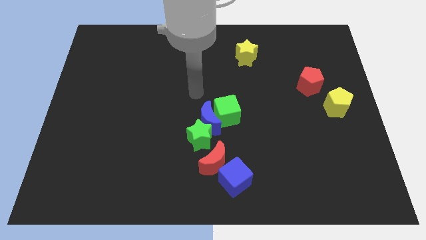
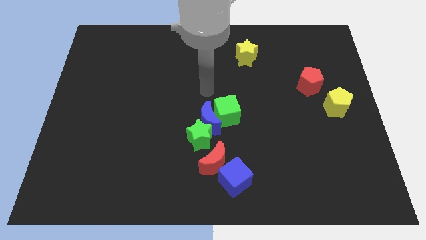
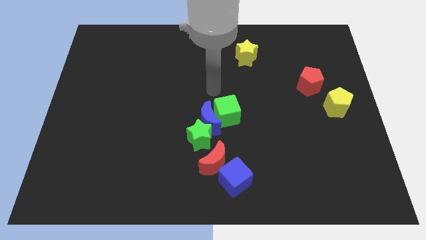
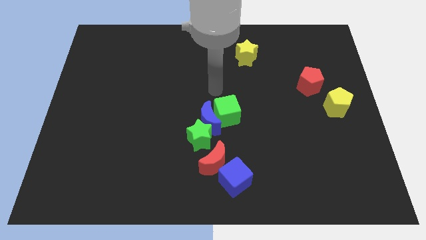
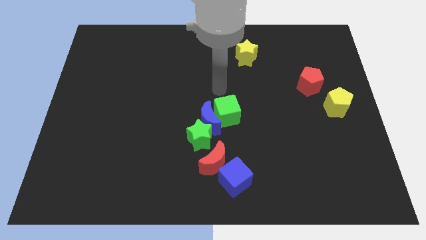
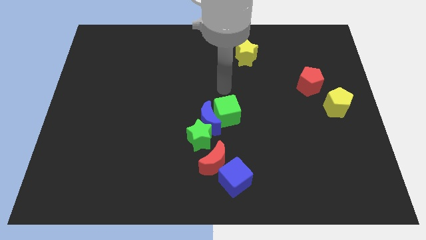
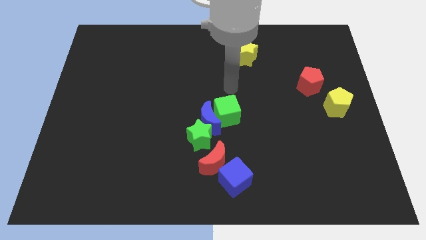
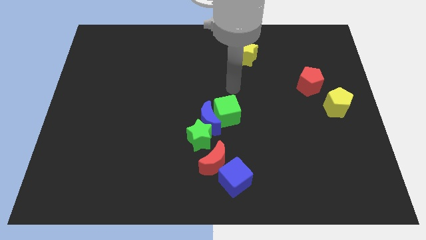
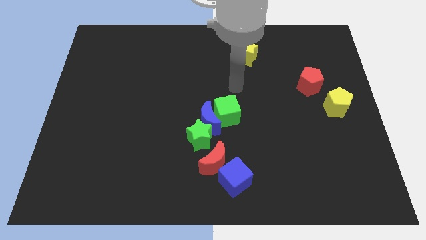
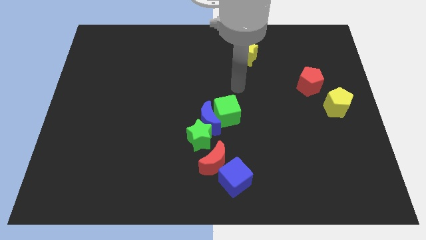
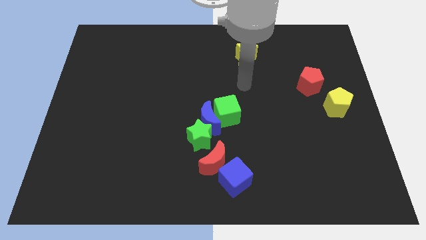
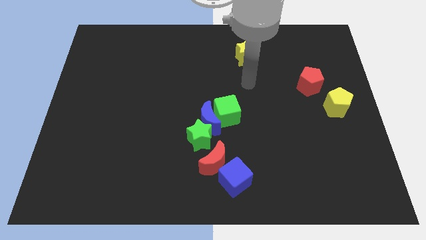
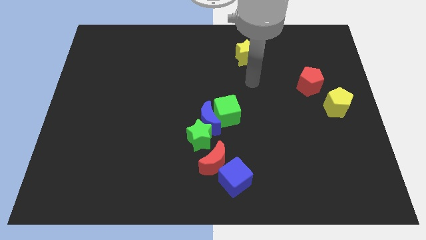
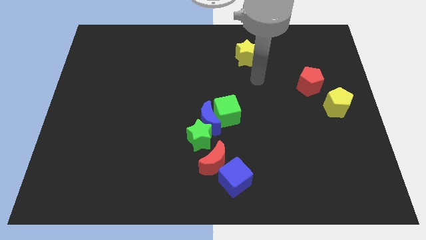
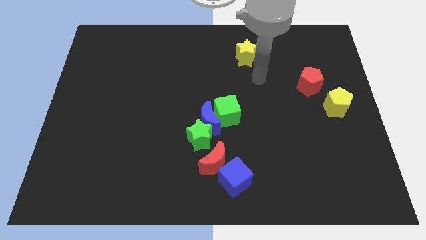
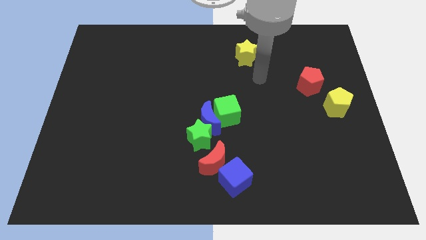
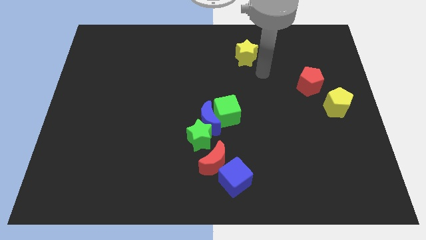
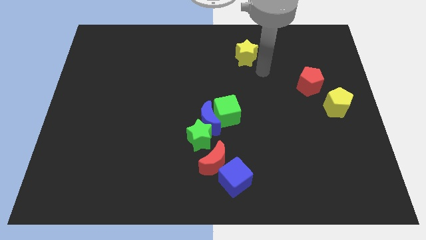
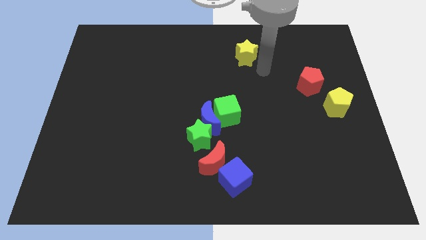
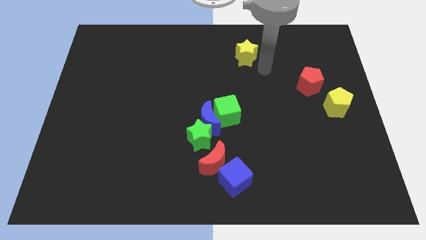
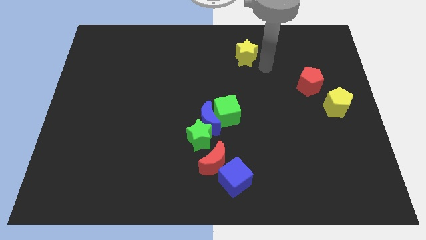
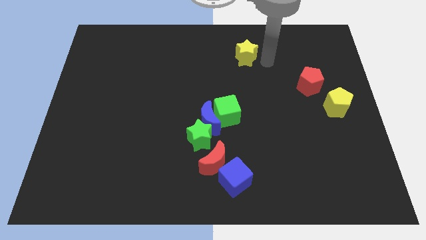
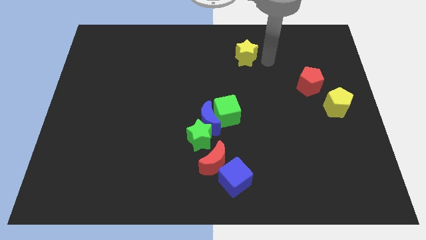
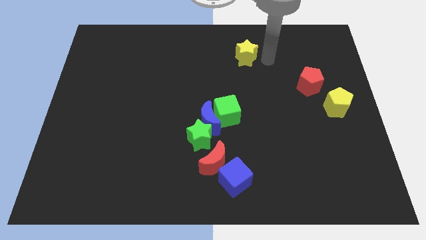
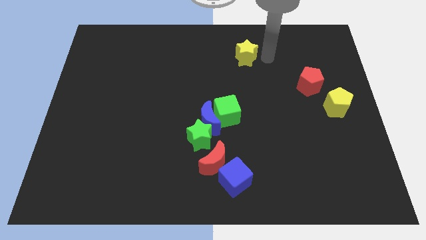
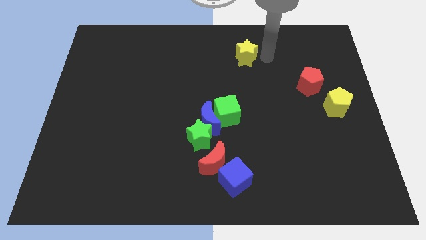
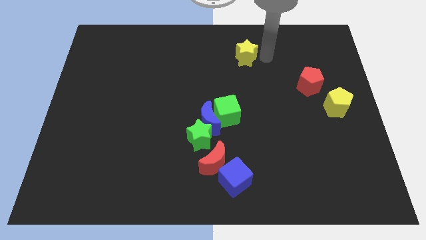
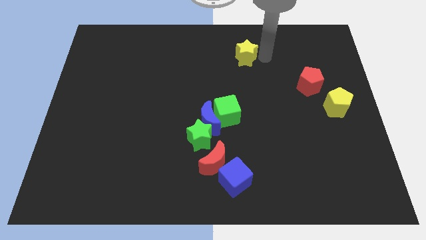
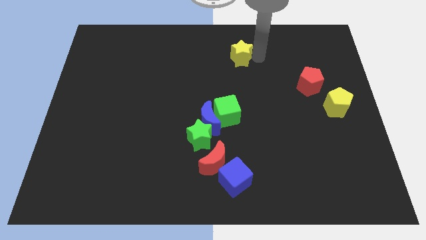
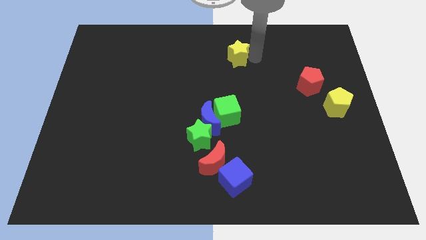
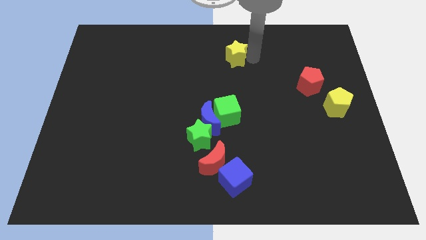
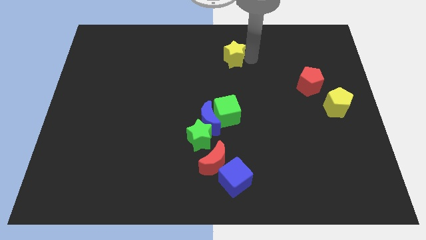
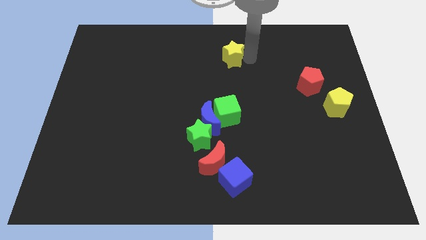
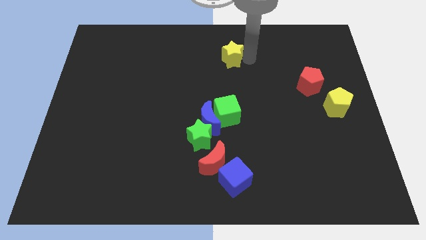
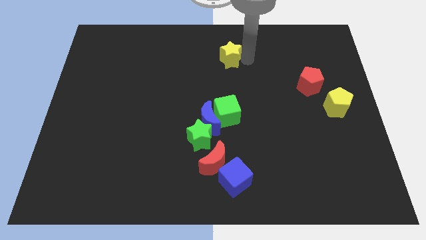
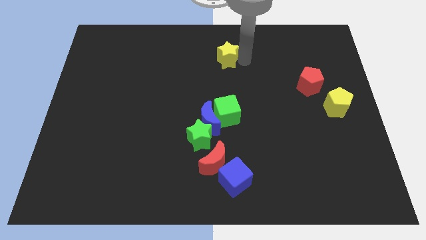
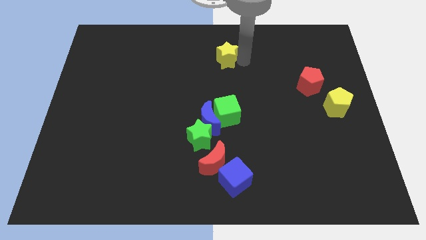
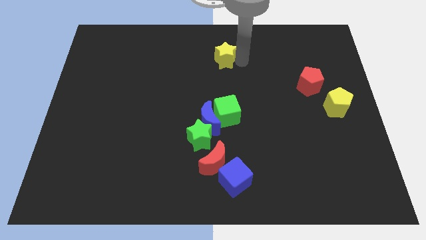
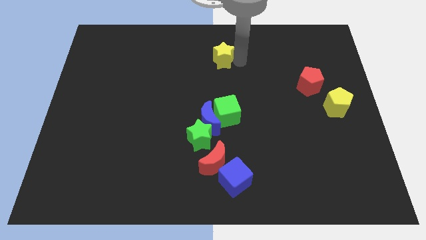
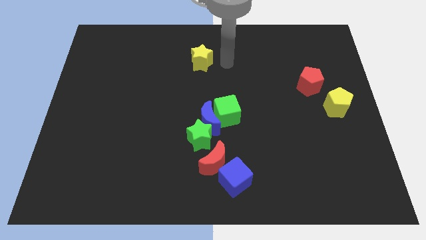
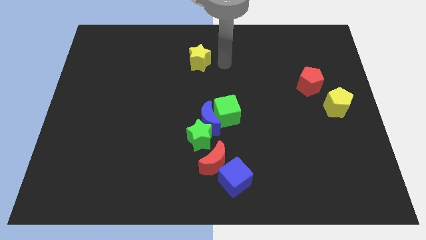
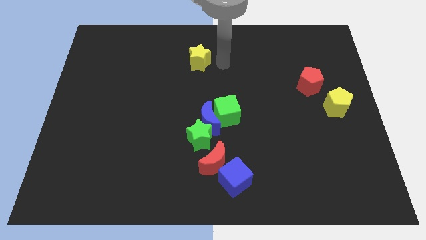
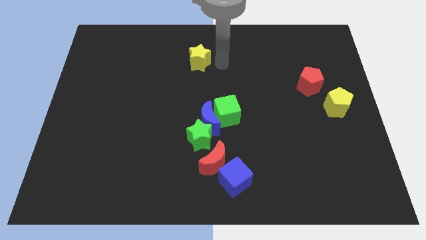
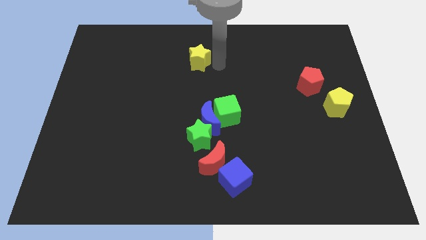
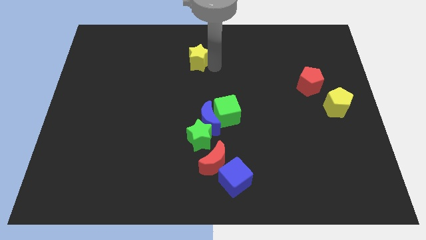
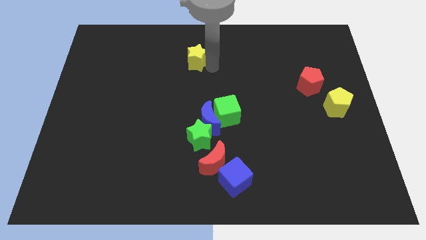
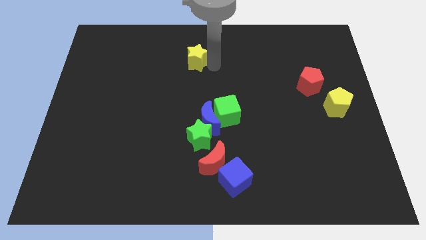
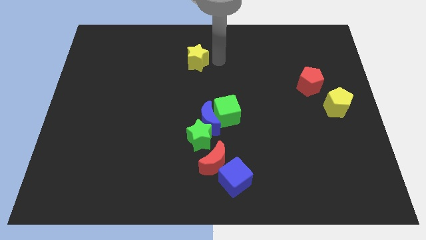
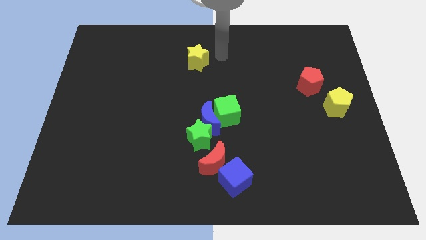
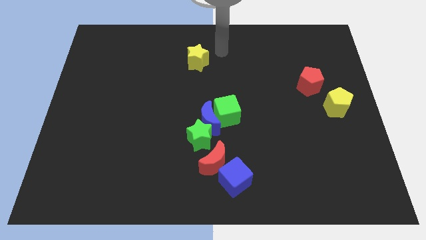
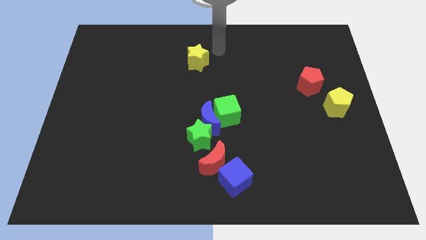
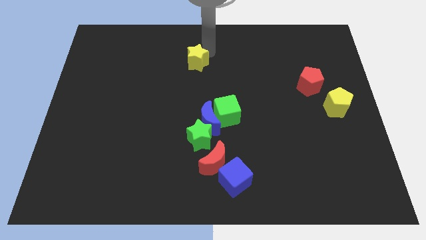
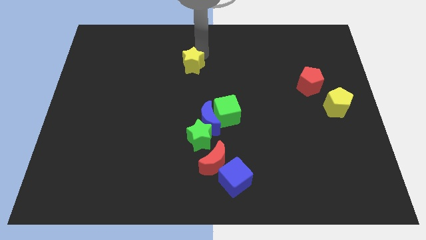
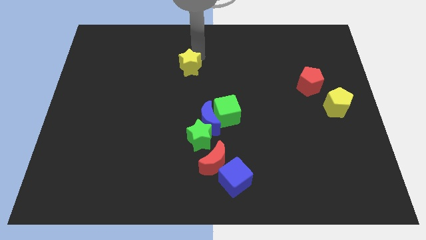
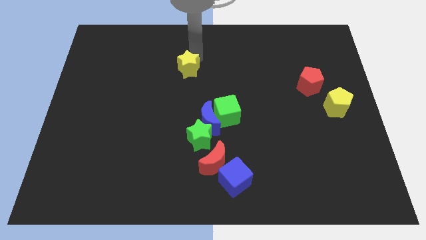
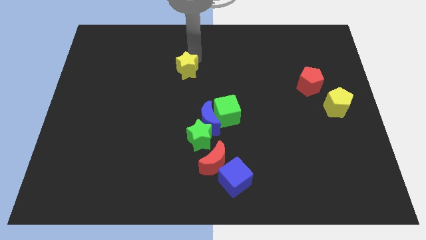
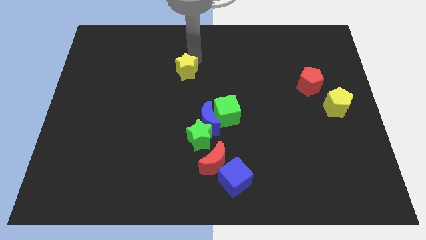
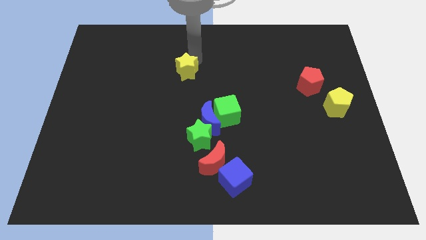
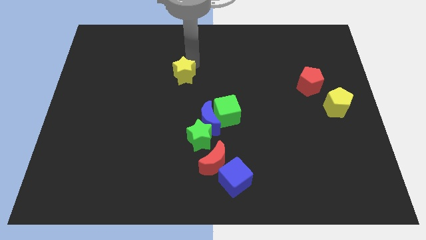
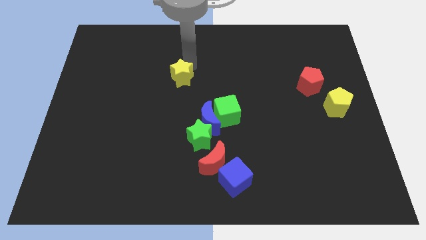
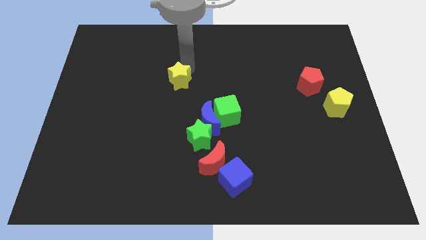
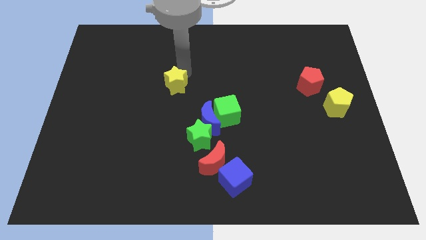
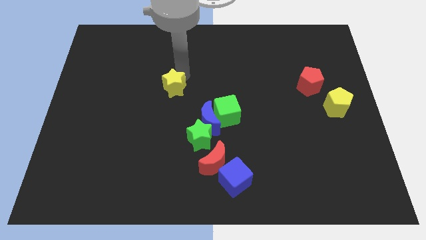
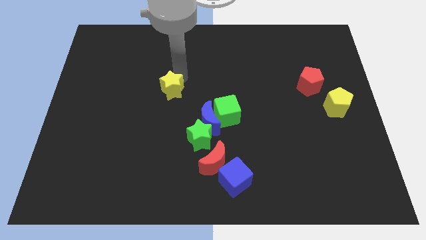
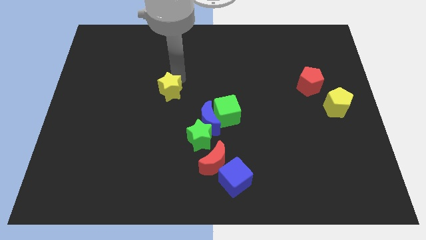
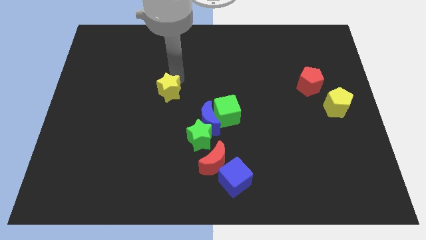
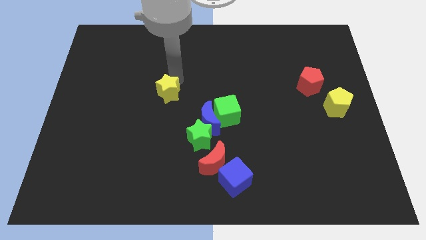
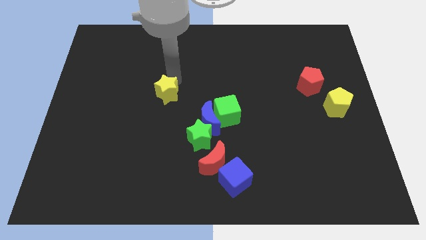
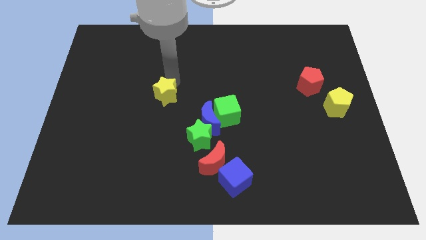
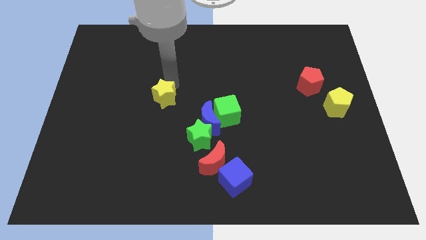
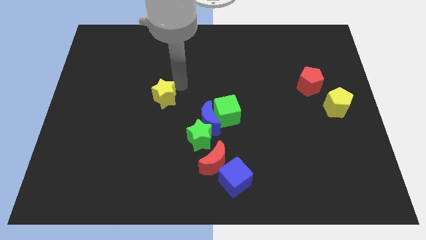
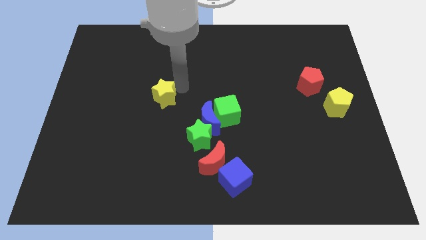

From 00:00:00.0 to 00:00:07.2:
push the yellow star towards the center left of the board

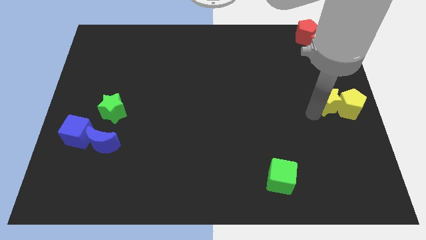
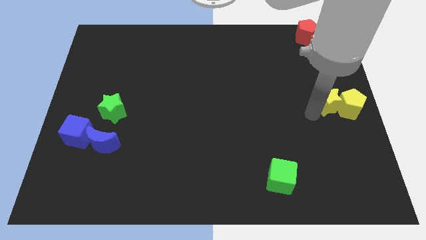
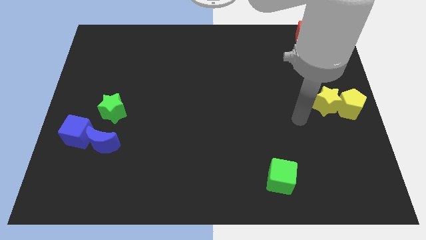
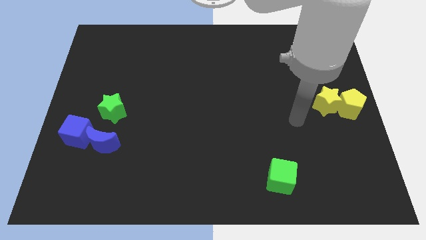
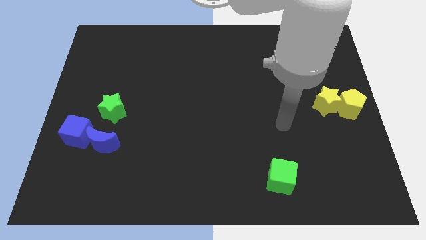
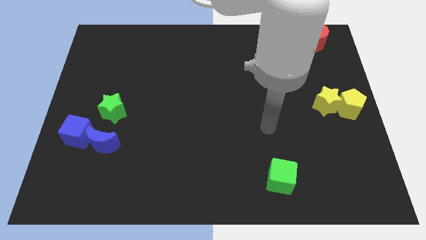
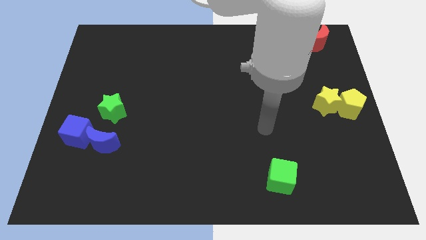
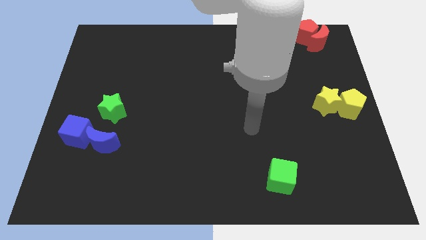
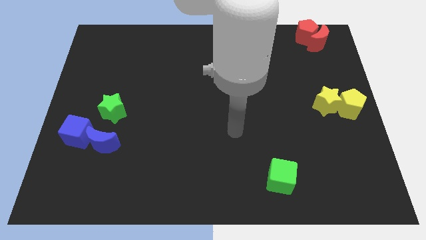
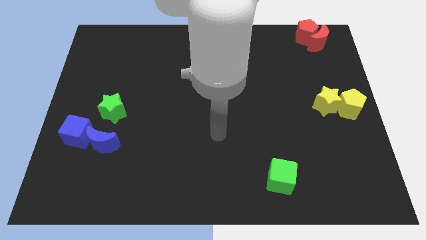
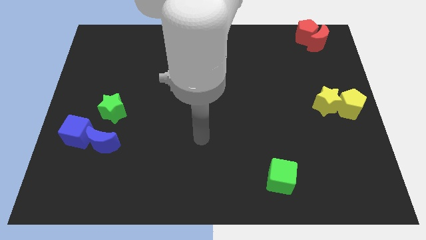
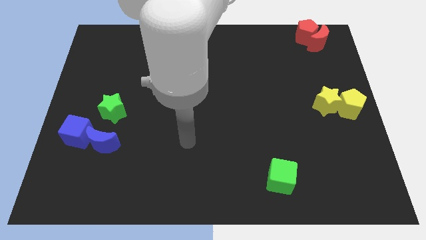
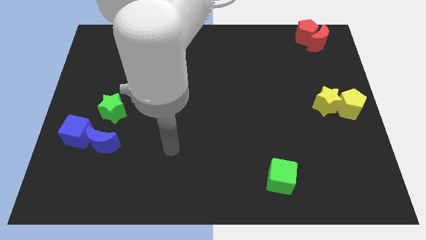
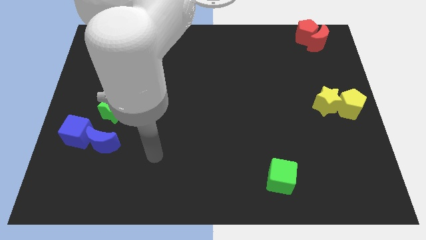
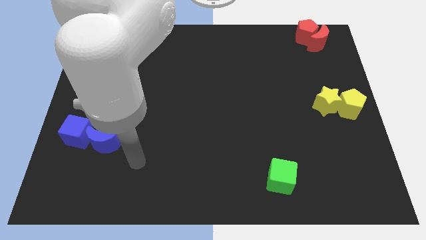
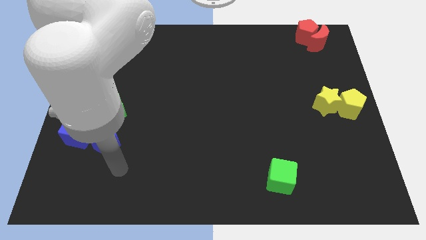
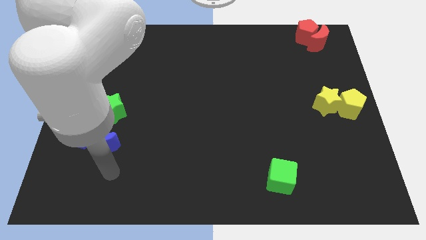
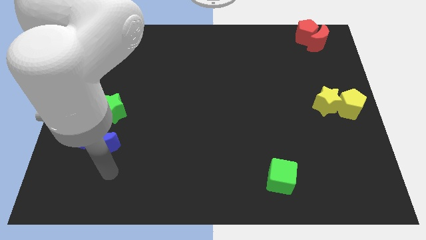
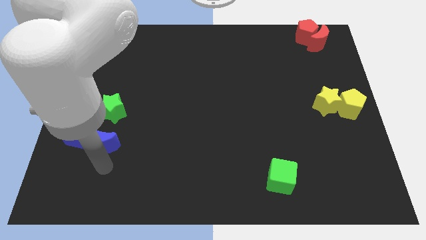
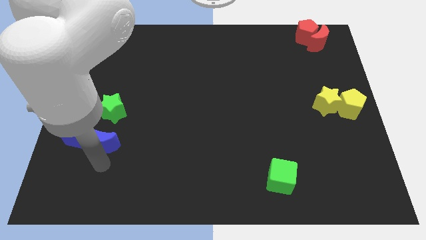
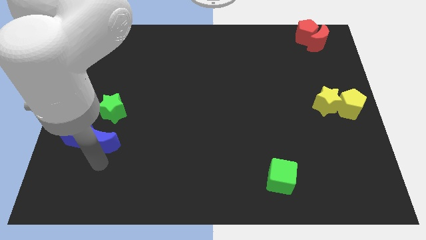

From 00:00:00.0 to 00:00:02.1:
move the arm towards the bottom of the blue moon
